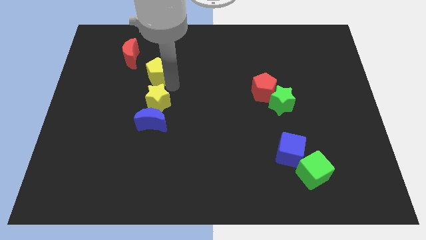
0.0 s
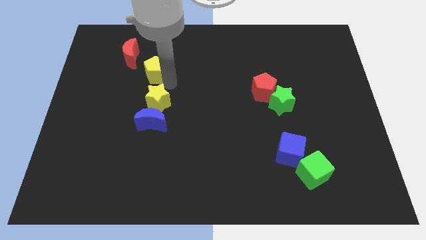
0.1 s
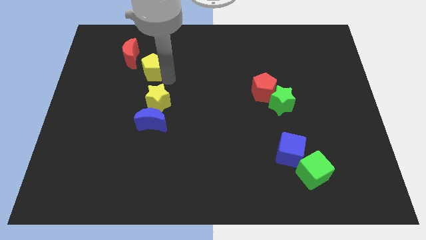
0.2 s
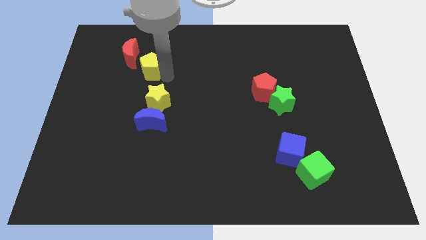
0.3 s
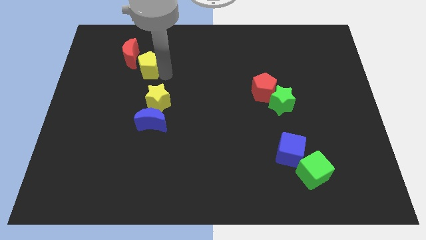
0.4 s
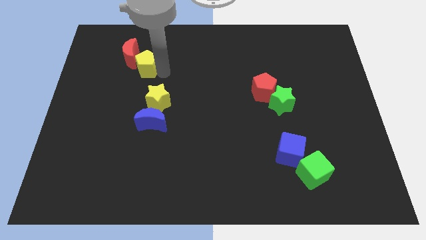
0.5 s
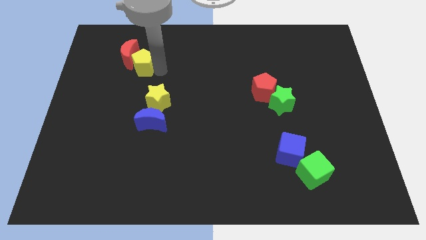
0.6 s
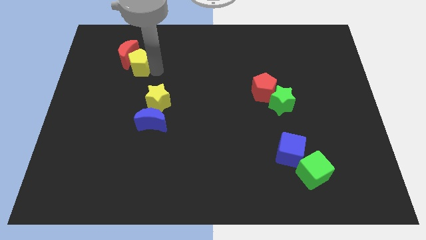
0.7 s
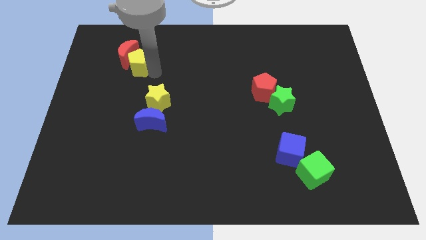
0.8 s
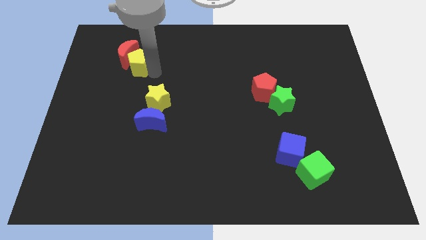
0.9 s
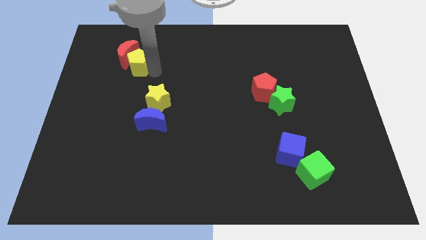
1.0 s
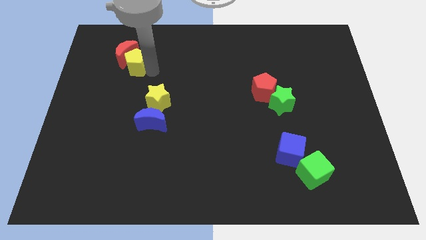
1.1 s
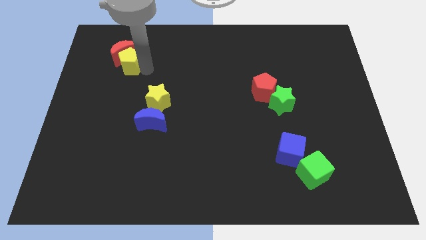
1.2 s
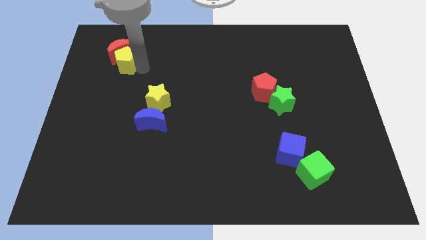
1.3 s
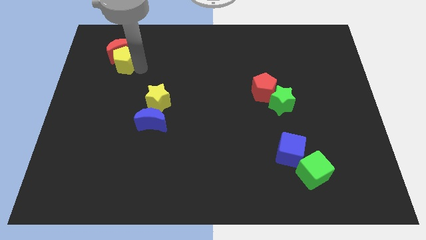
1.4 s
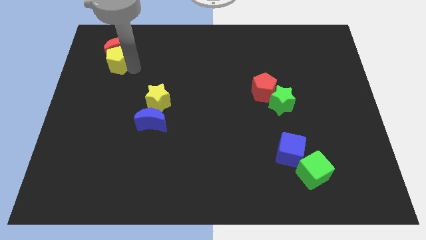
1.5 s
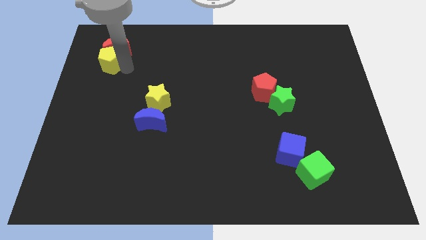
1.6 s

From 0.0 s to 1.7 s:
move the yellow pentagon below the red crescent

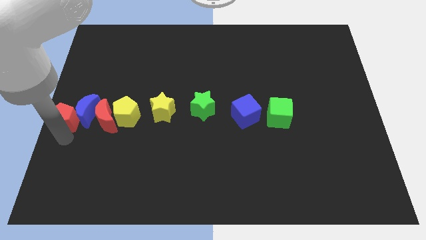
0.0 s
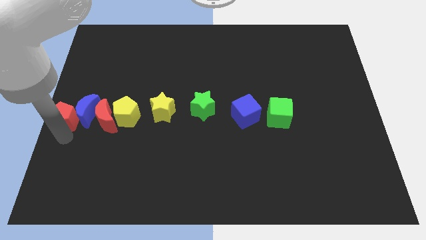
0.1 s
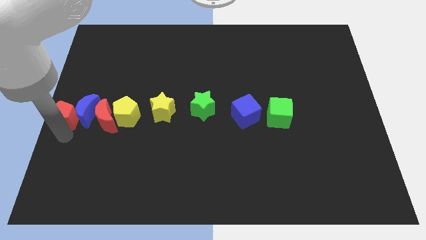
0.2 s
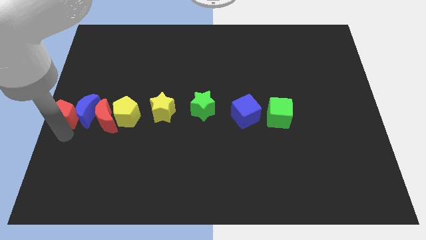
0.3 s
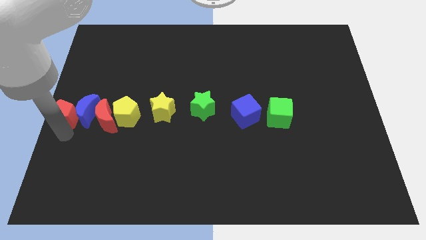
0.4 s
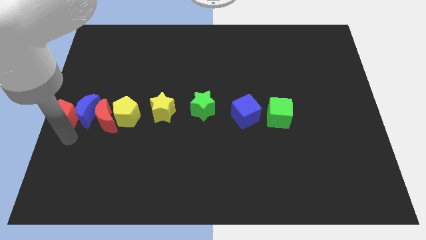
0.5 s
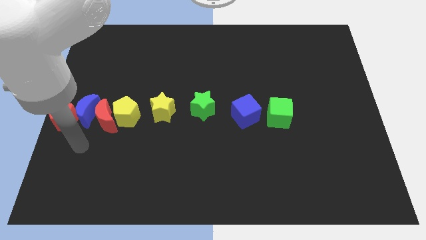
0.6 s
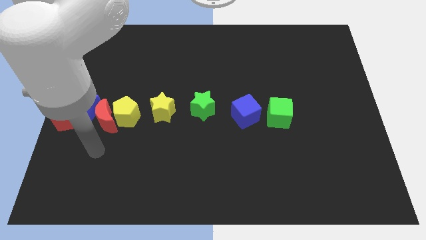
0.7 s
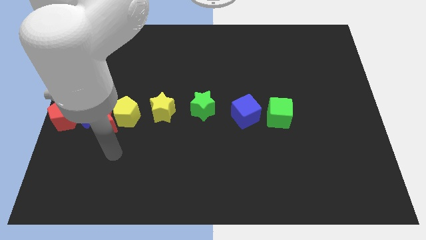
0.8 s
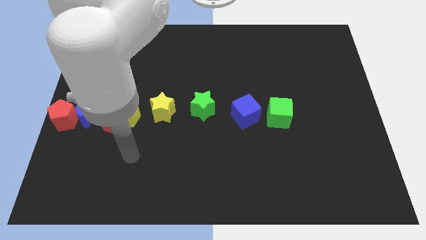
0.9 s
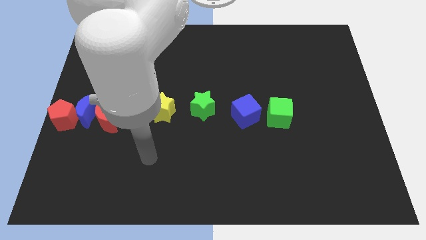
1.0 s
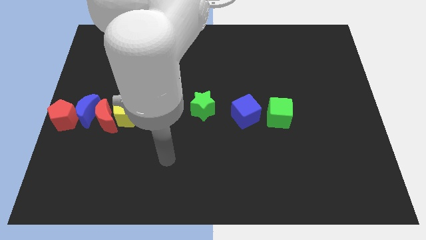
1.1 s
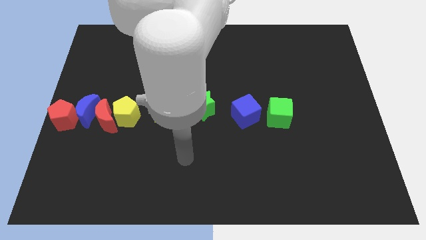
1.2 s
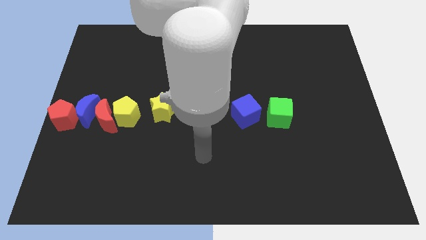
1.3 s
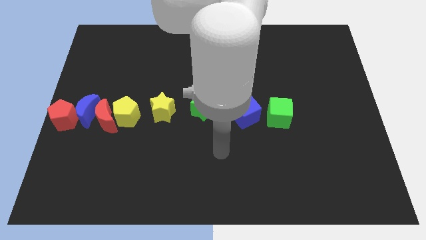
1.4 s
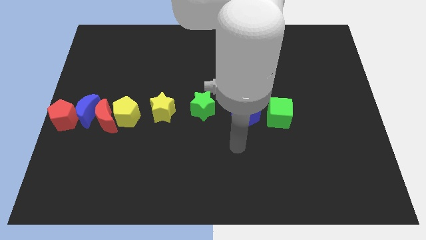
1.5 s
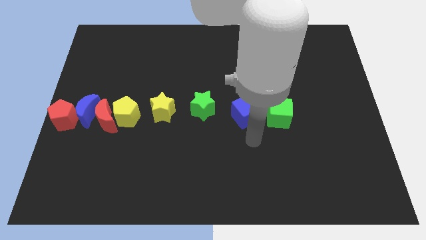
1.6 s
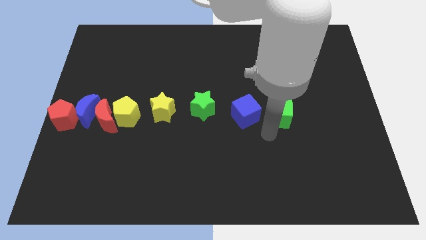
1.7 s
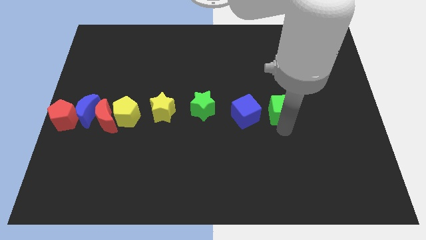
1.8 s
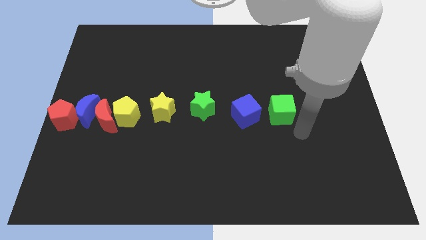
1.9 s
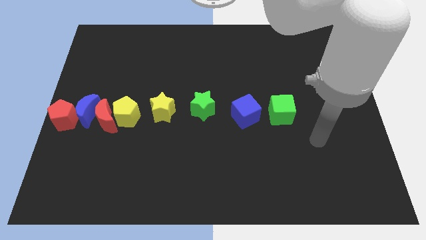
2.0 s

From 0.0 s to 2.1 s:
move the arm away from the blocks

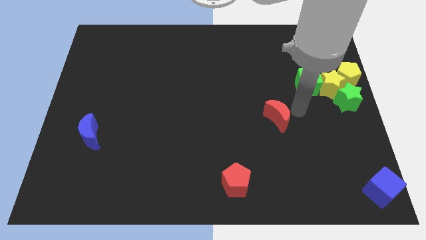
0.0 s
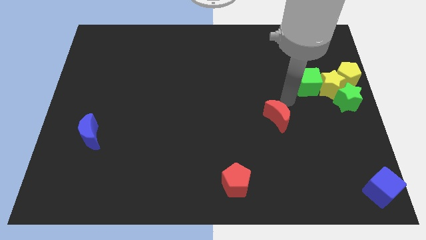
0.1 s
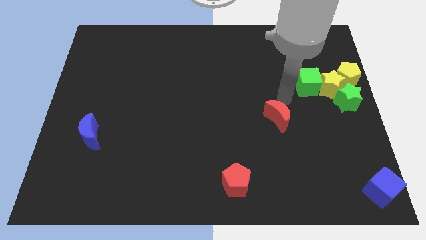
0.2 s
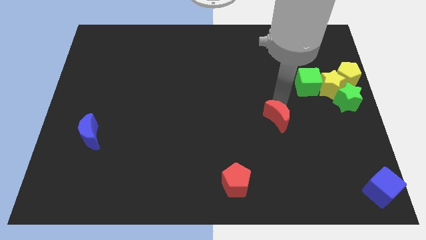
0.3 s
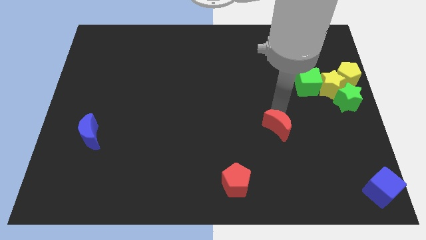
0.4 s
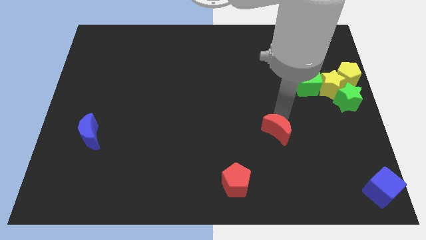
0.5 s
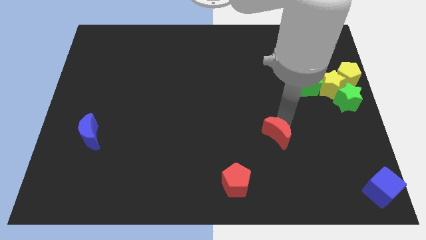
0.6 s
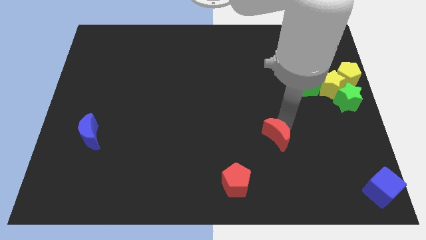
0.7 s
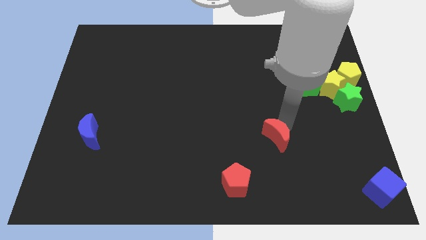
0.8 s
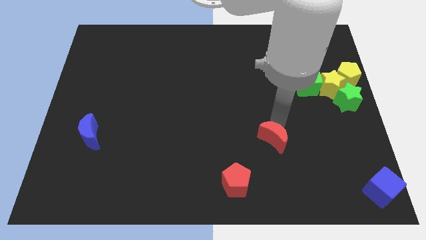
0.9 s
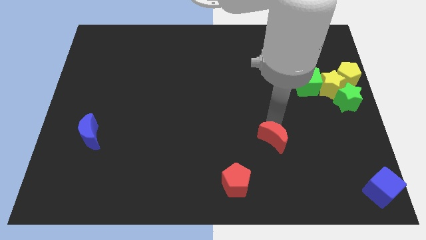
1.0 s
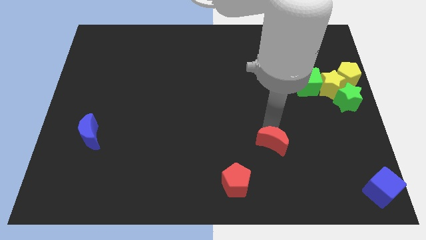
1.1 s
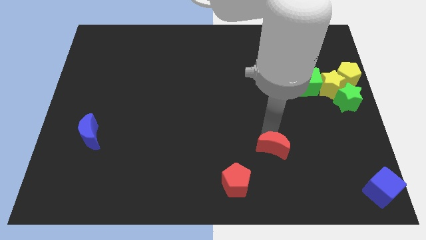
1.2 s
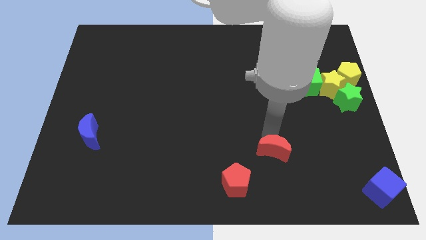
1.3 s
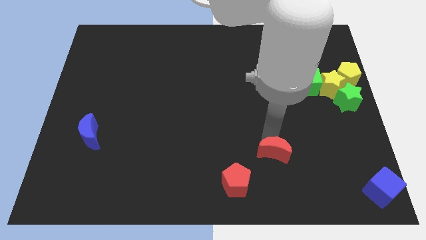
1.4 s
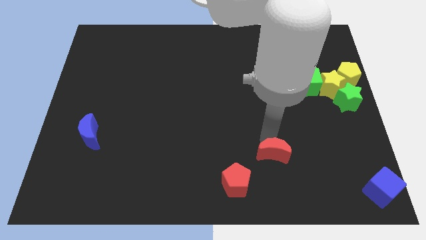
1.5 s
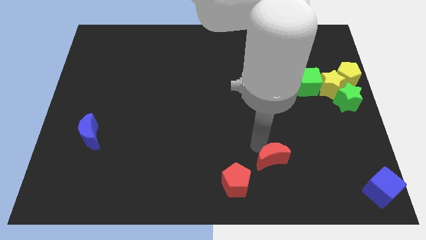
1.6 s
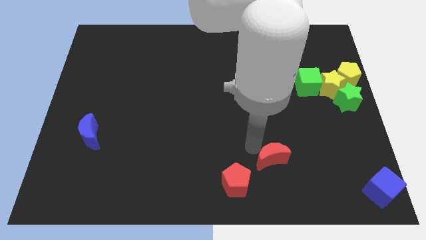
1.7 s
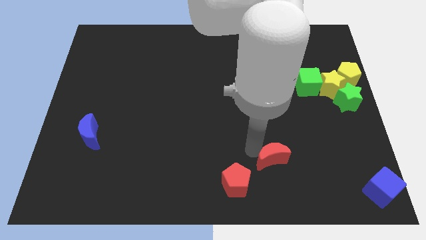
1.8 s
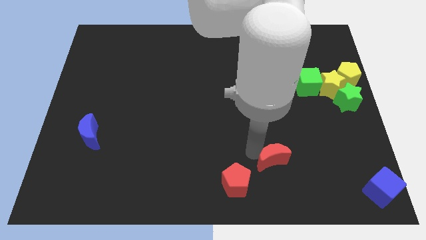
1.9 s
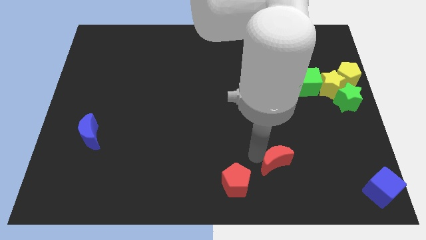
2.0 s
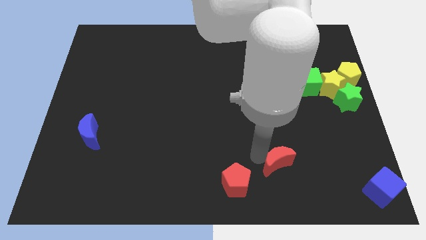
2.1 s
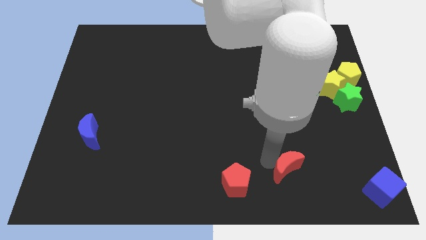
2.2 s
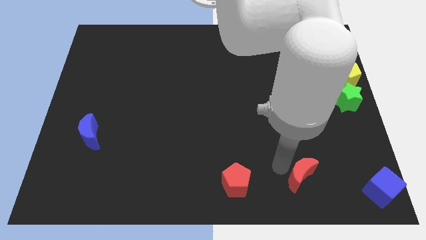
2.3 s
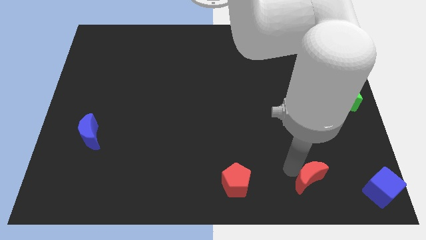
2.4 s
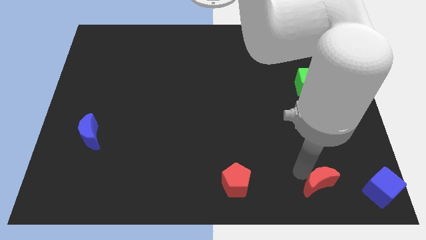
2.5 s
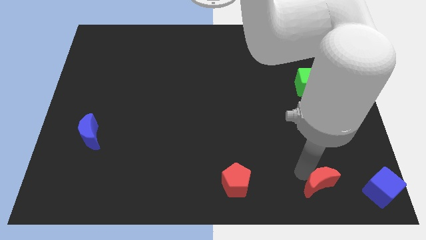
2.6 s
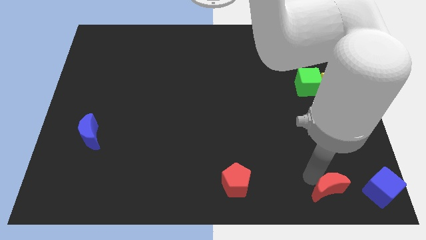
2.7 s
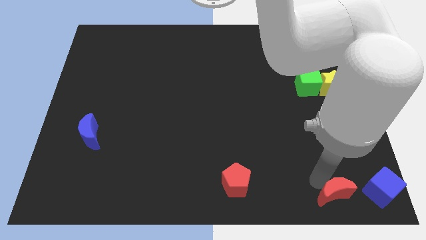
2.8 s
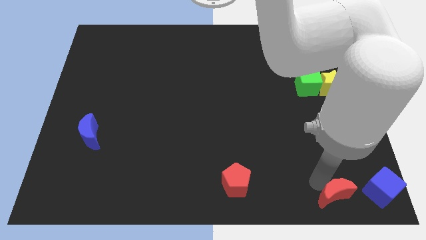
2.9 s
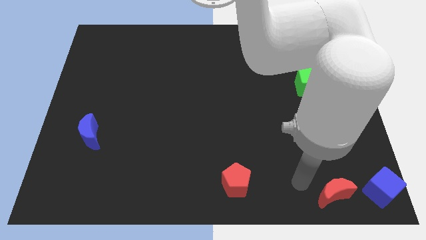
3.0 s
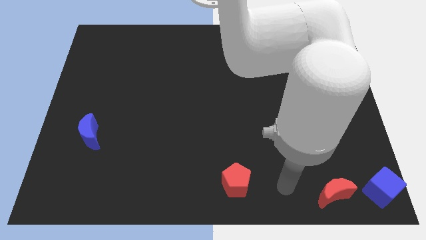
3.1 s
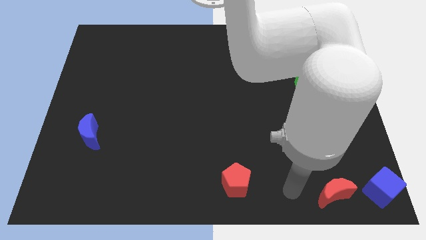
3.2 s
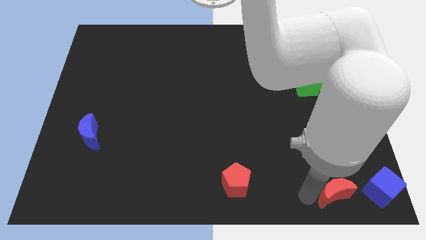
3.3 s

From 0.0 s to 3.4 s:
place red moon to the left of blue cube

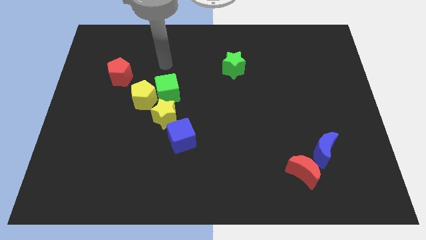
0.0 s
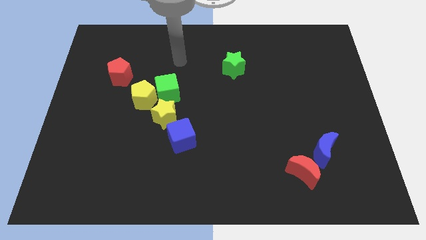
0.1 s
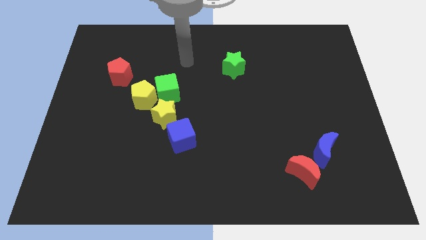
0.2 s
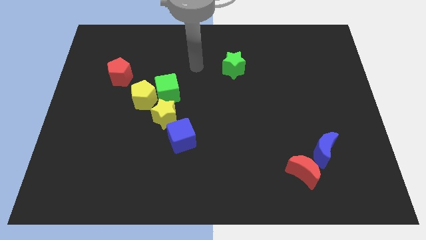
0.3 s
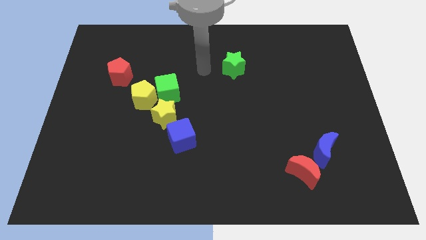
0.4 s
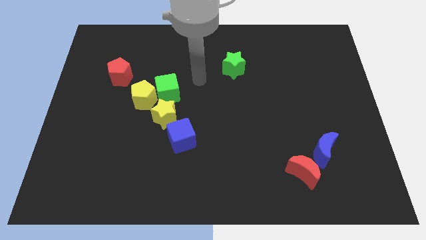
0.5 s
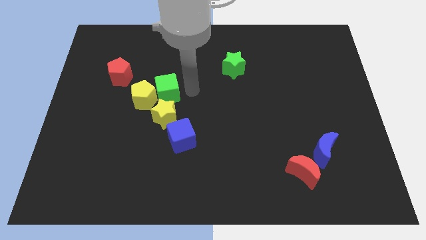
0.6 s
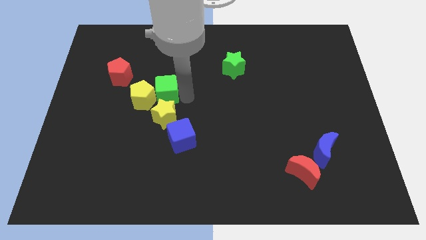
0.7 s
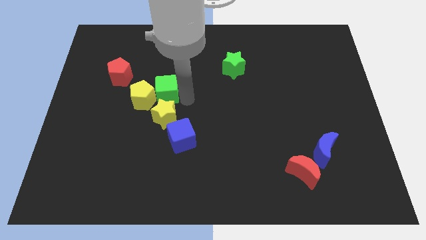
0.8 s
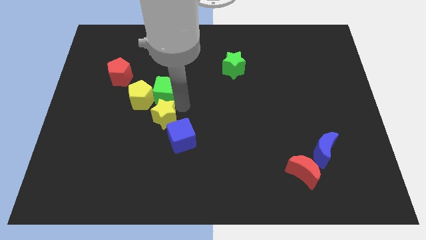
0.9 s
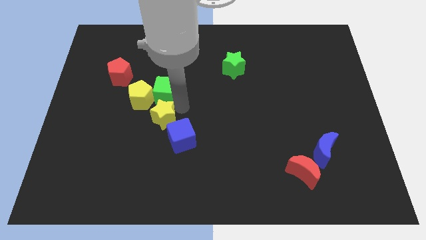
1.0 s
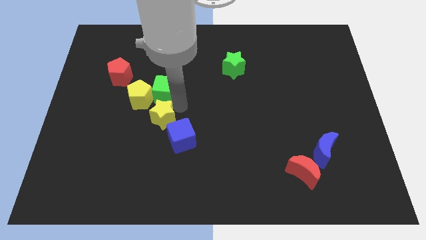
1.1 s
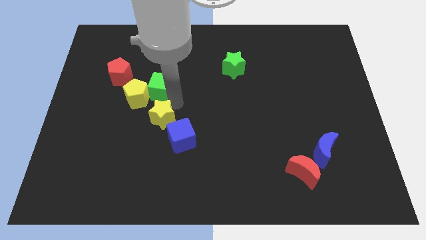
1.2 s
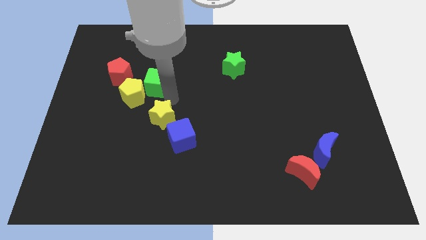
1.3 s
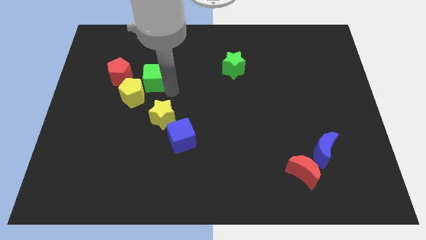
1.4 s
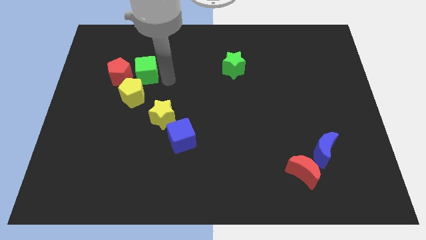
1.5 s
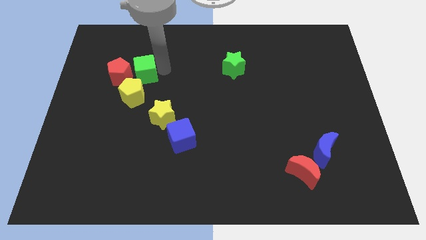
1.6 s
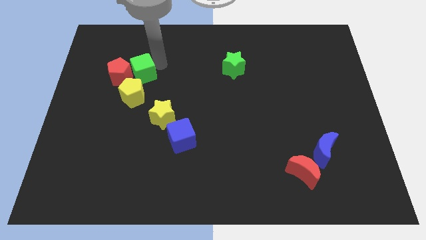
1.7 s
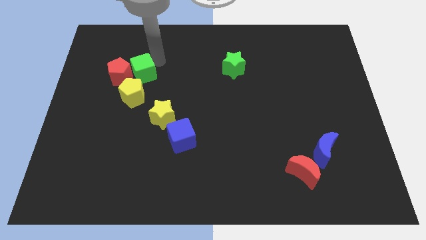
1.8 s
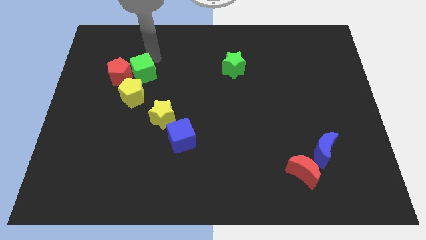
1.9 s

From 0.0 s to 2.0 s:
move the green cube close to the red pentagon
